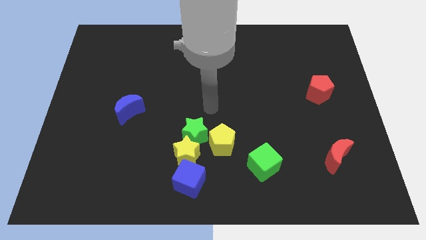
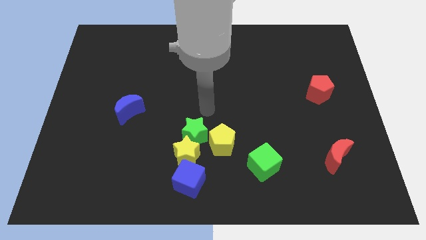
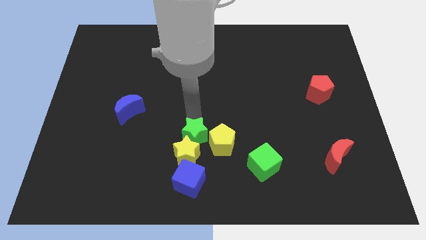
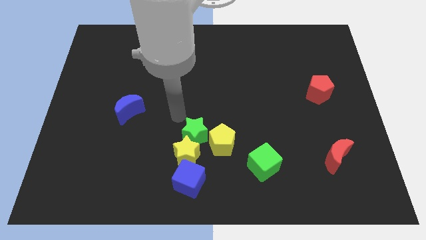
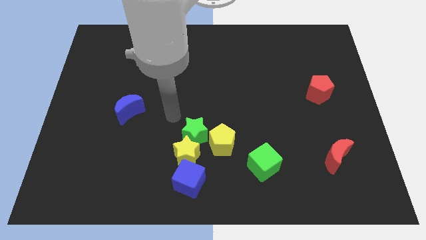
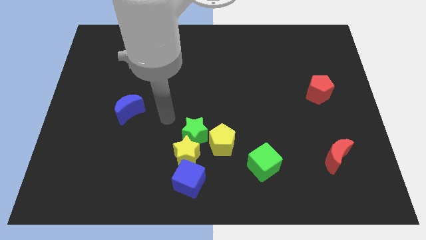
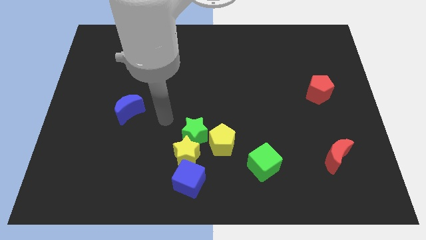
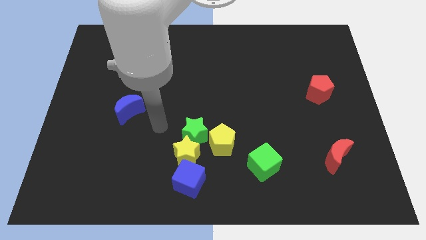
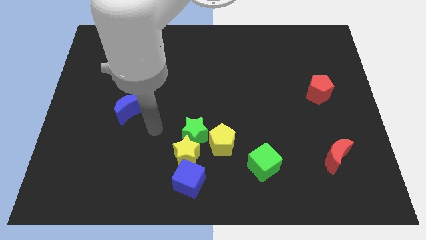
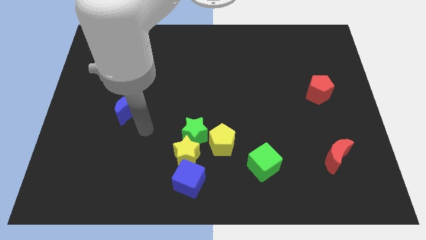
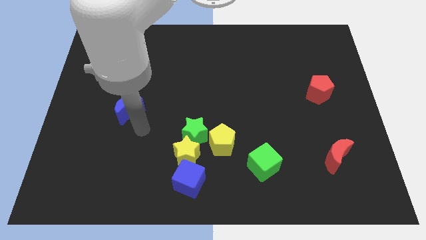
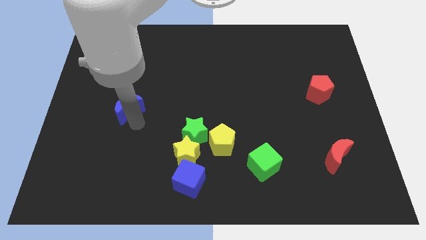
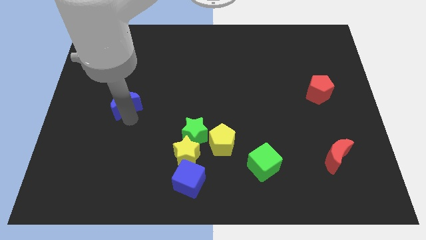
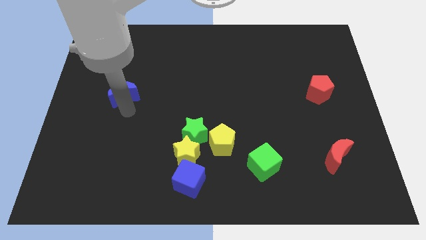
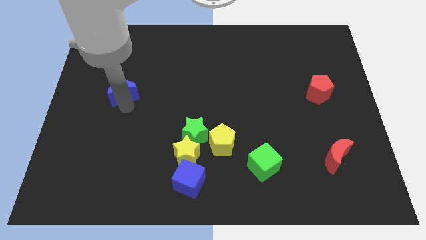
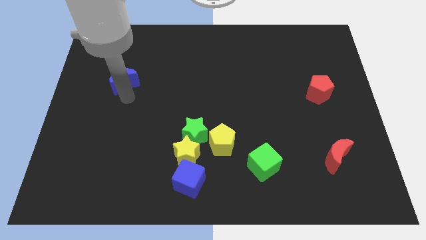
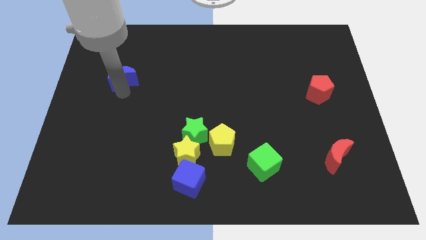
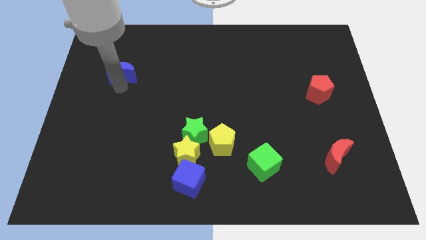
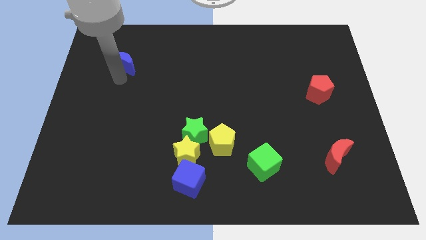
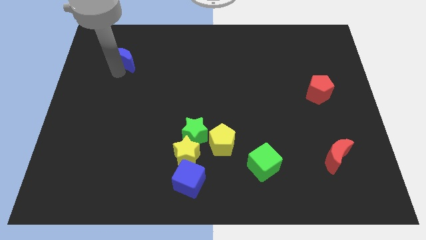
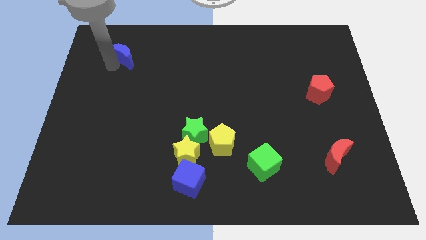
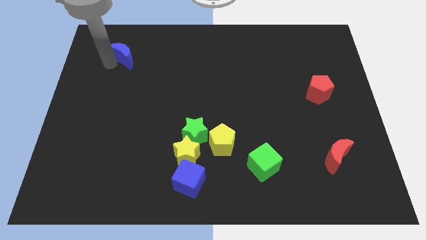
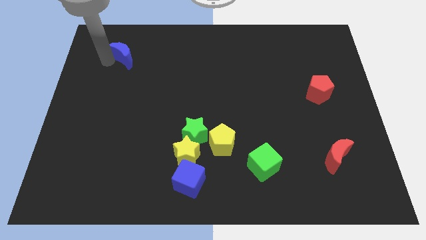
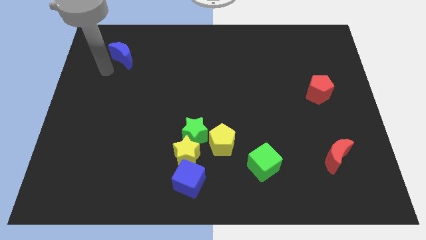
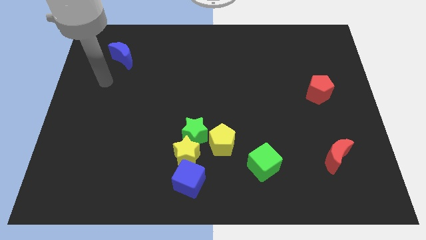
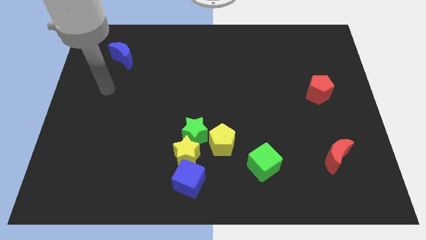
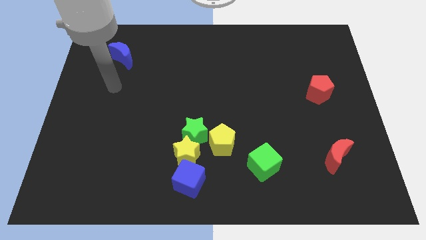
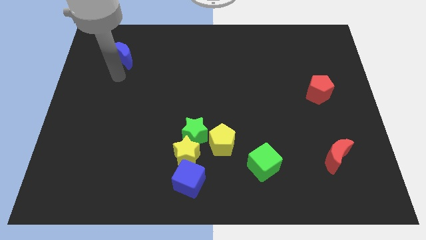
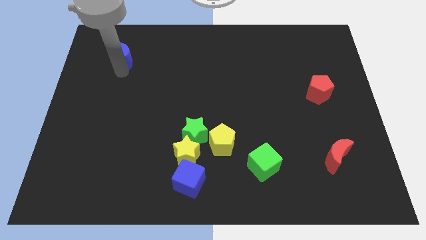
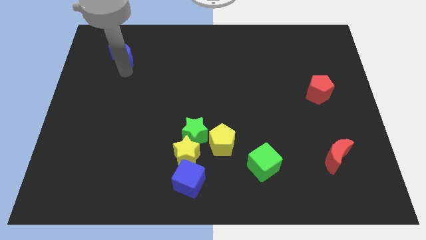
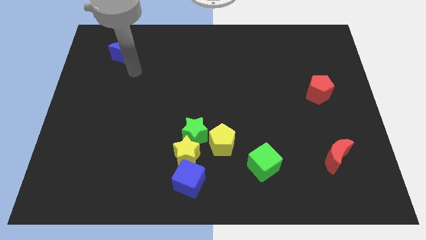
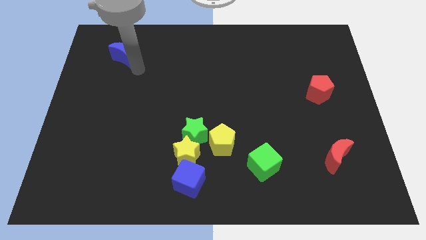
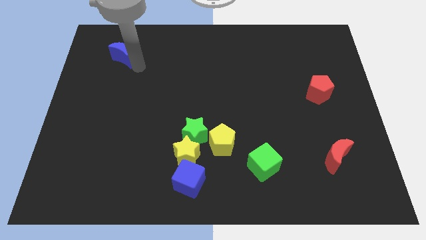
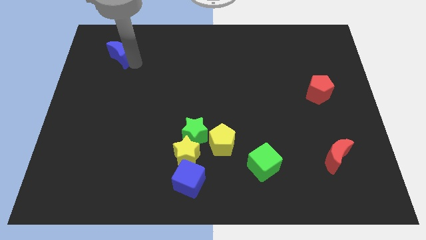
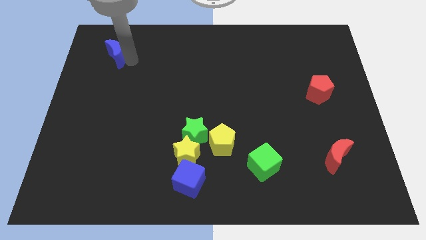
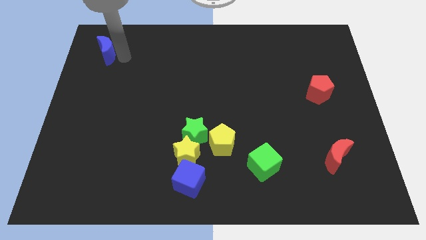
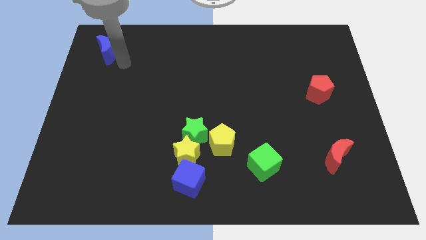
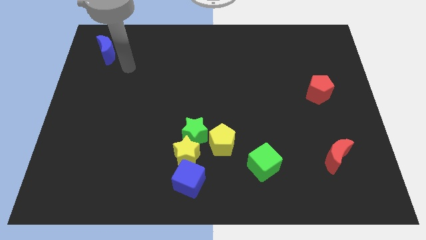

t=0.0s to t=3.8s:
move the blue crescent to the top left of the board

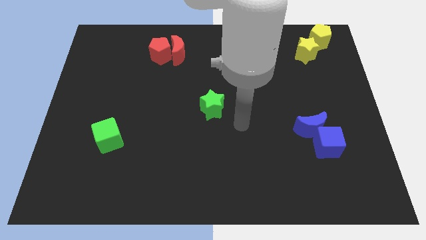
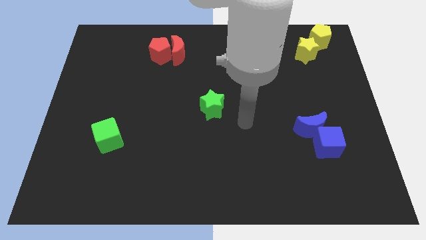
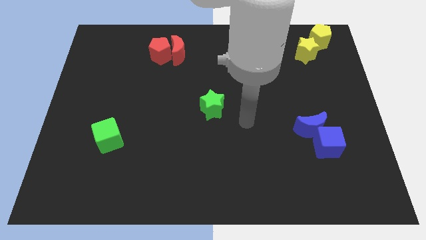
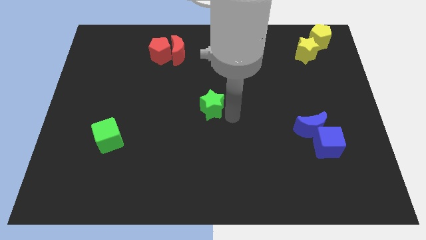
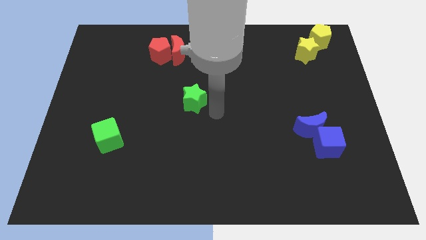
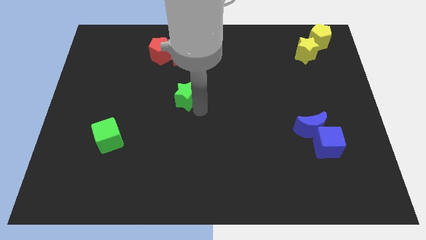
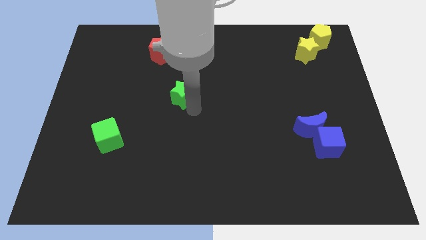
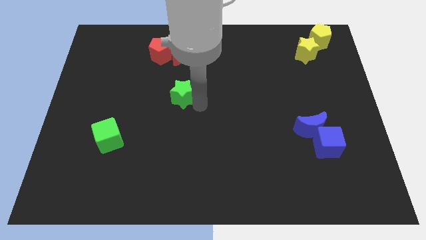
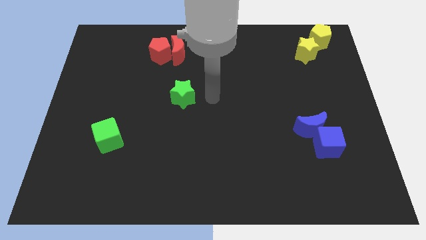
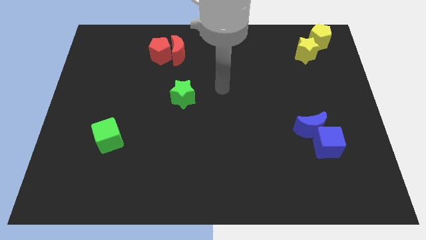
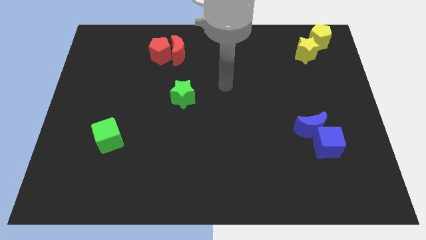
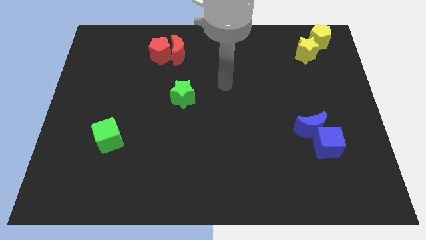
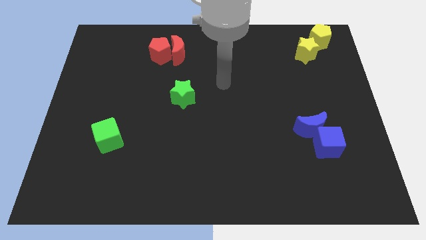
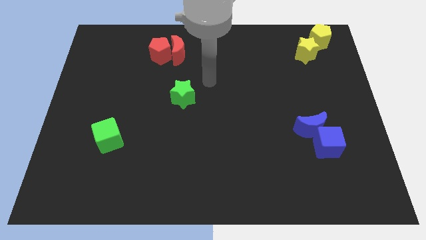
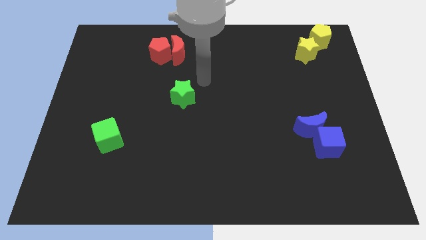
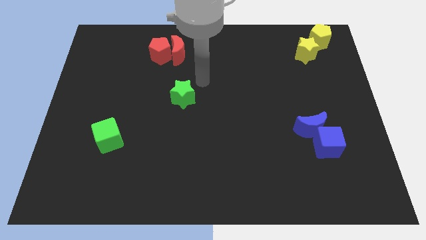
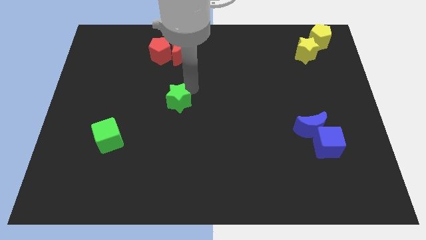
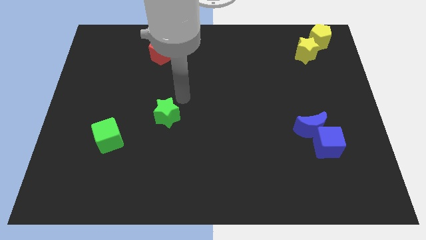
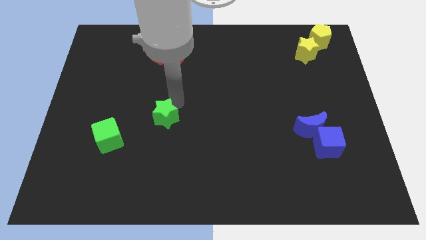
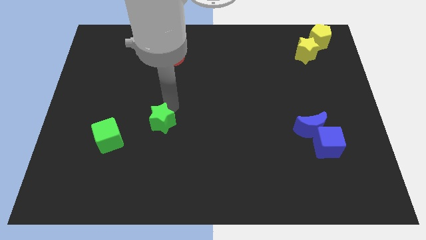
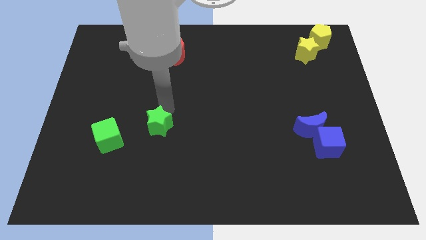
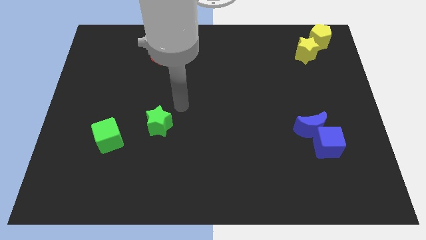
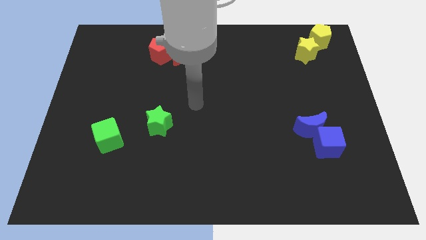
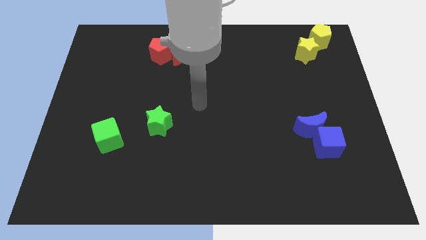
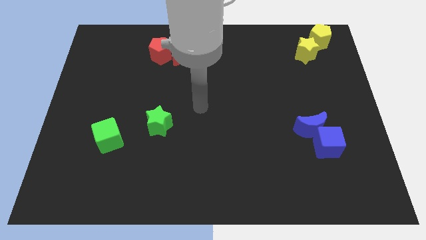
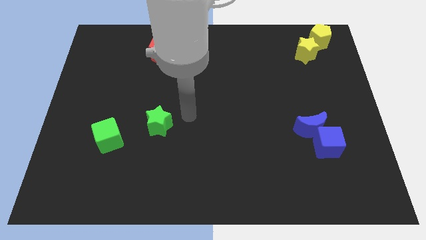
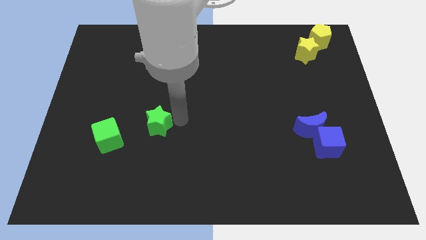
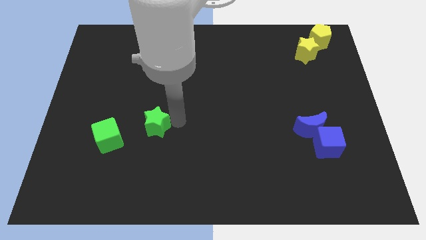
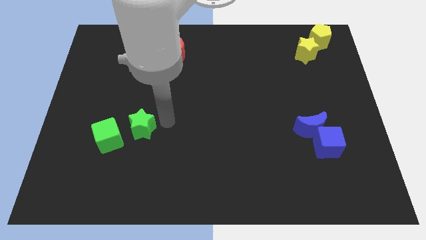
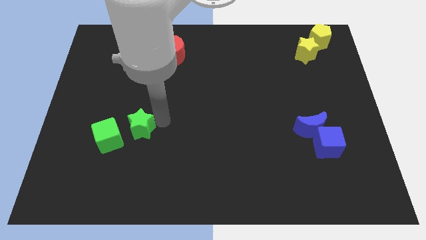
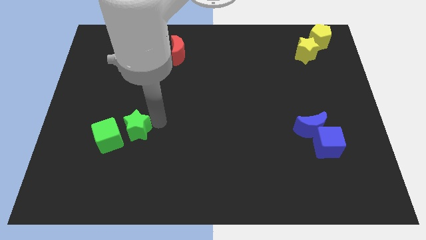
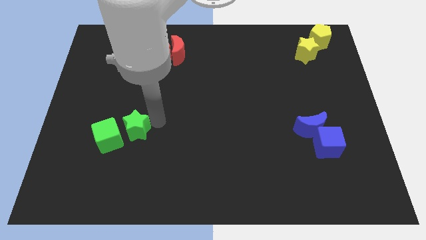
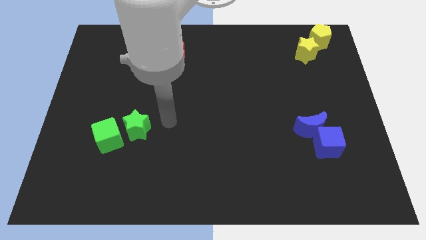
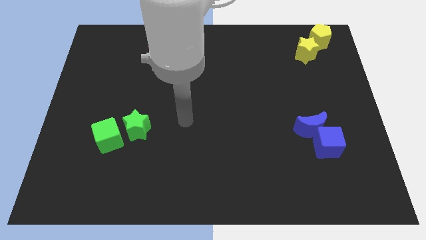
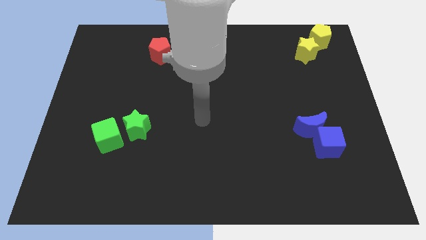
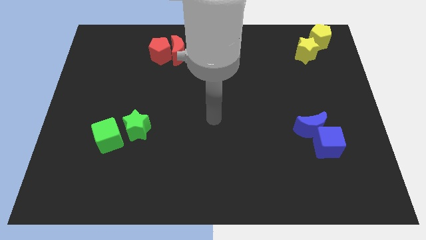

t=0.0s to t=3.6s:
push the green star into the green cube

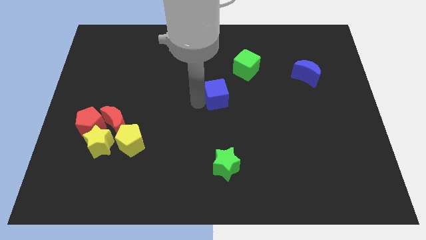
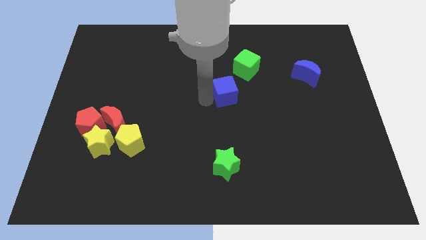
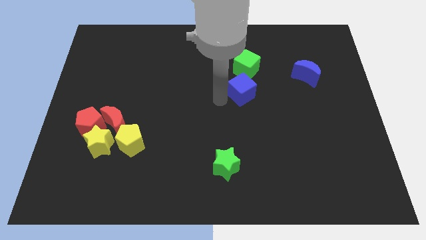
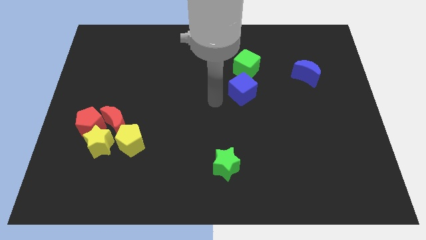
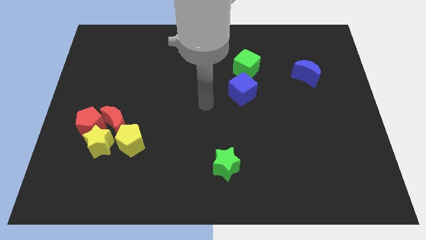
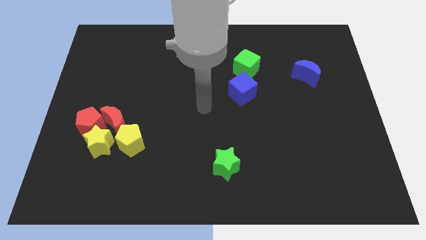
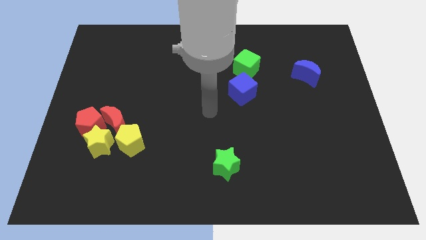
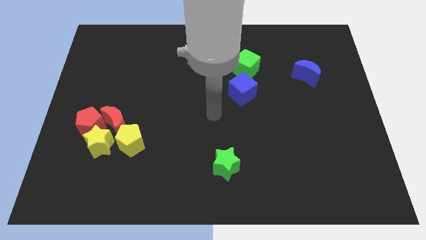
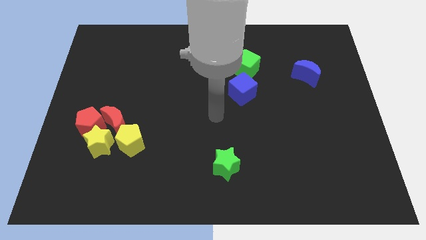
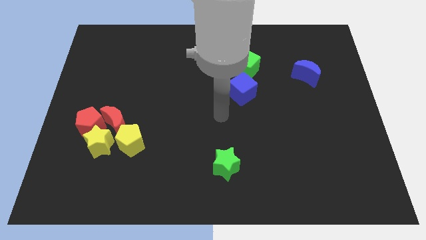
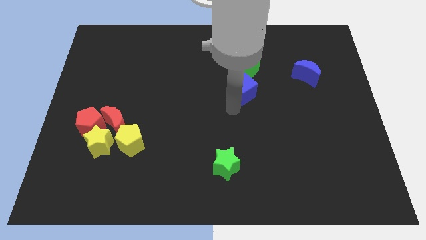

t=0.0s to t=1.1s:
place the blue cube below the green cube

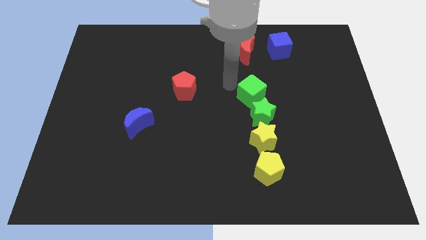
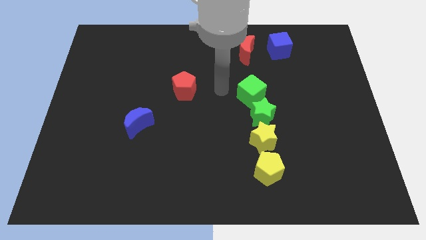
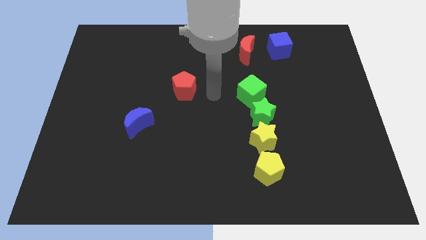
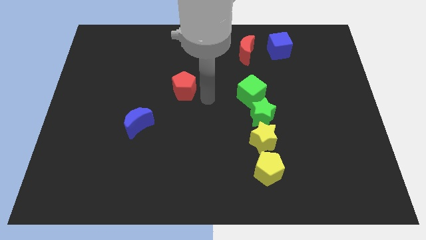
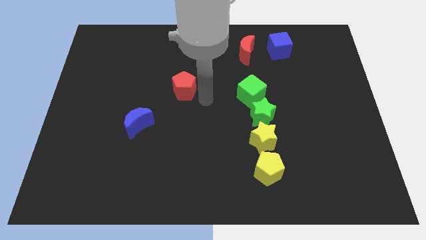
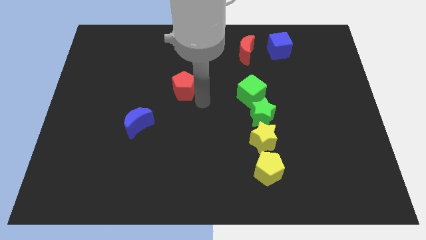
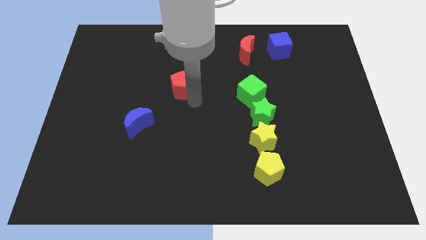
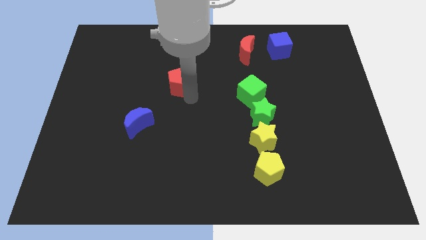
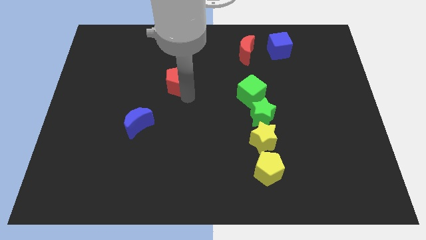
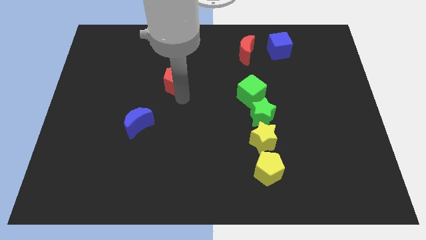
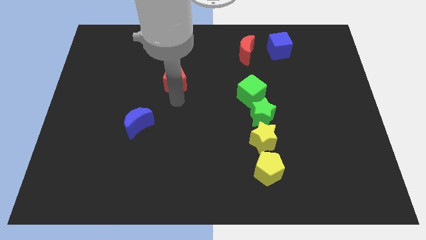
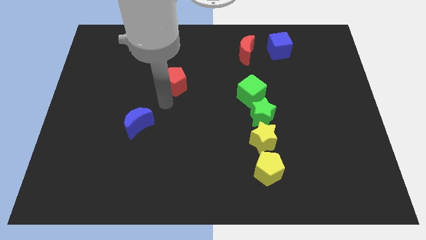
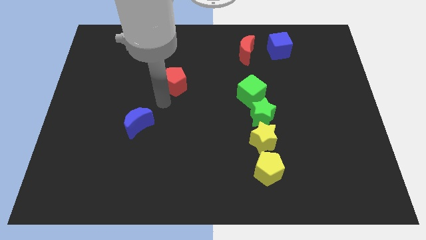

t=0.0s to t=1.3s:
push the red pentagon slightly left
